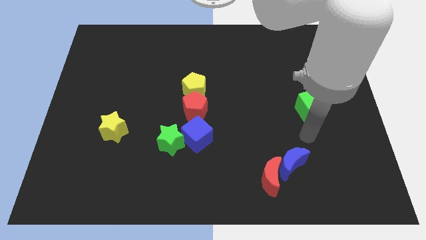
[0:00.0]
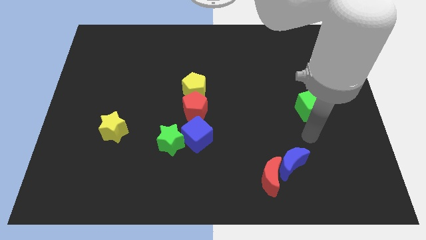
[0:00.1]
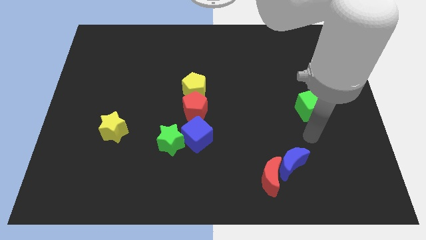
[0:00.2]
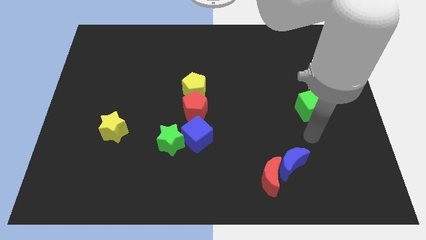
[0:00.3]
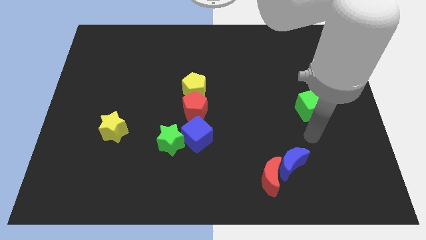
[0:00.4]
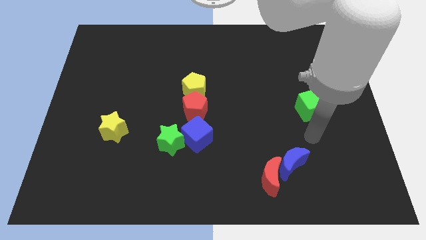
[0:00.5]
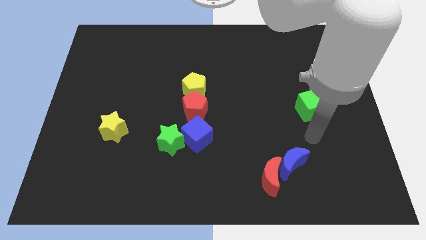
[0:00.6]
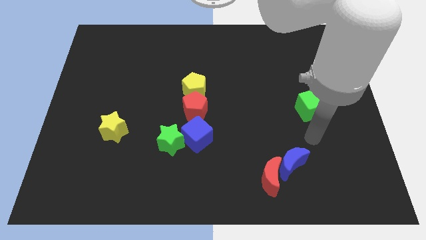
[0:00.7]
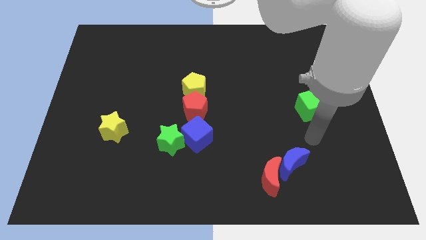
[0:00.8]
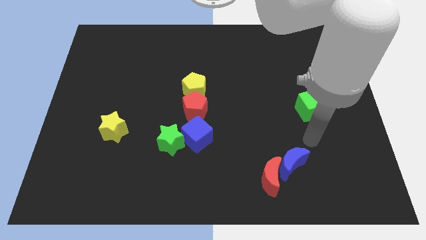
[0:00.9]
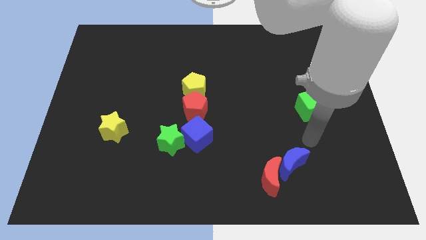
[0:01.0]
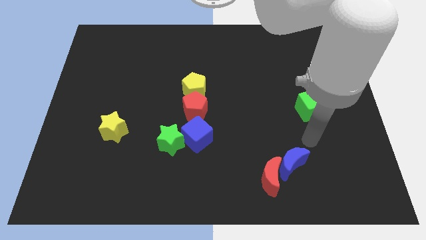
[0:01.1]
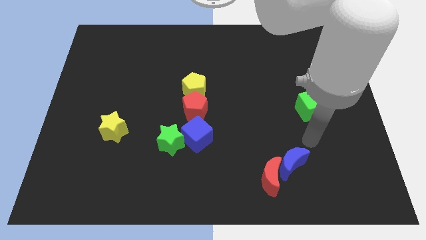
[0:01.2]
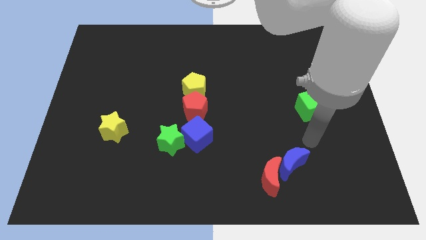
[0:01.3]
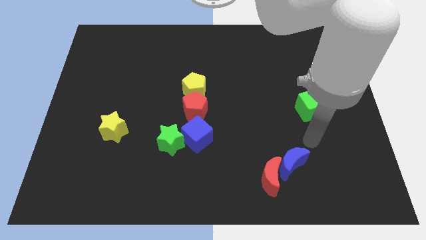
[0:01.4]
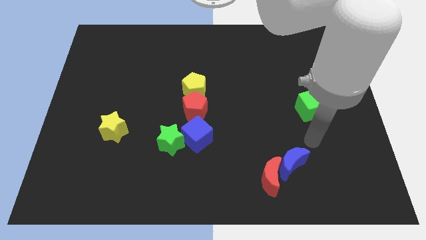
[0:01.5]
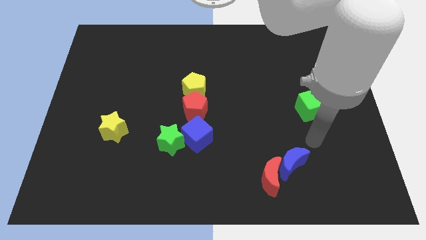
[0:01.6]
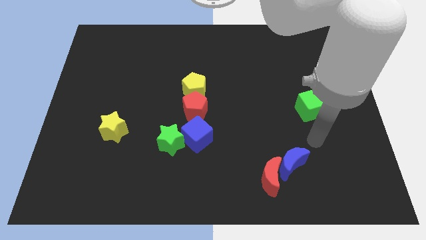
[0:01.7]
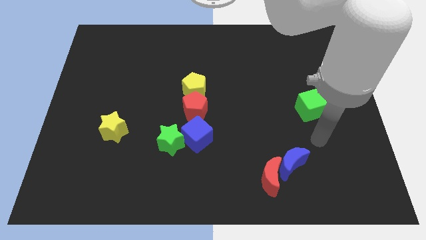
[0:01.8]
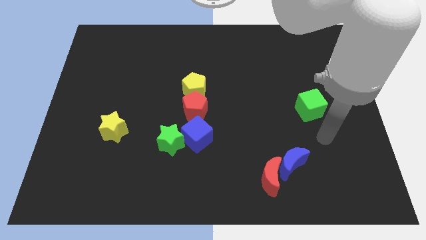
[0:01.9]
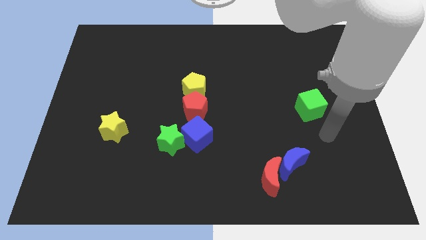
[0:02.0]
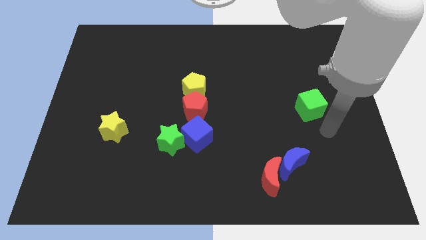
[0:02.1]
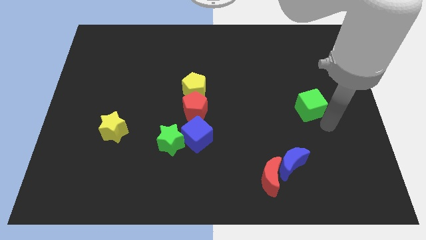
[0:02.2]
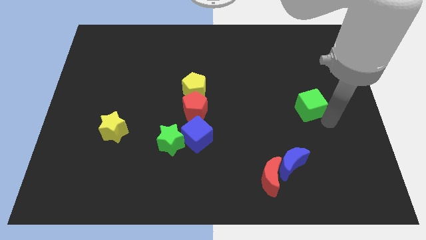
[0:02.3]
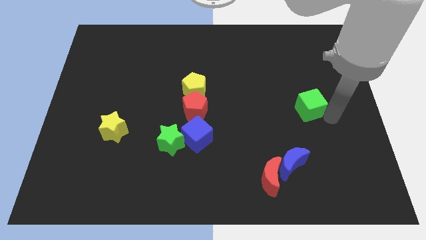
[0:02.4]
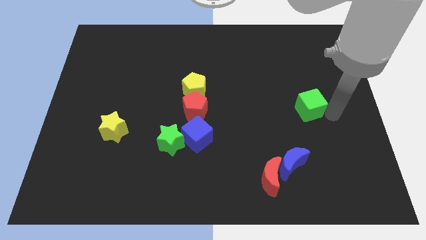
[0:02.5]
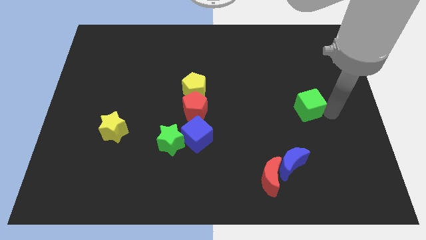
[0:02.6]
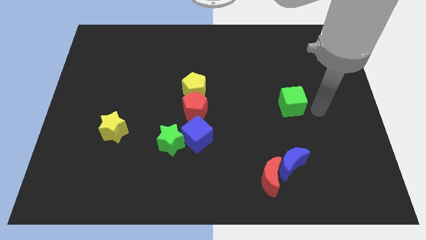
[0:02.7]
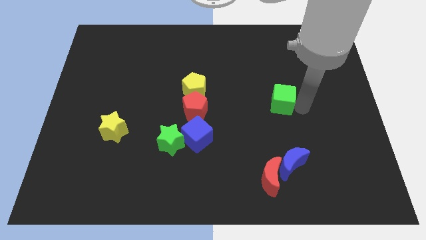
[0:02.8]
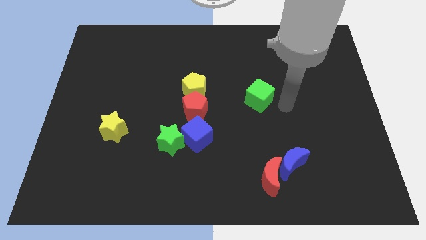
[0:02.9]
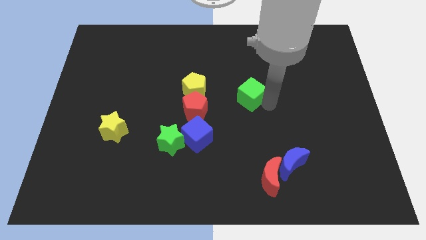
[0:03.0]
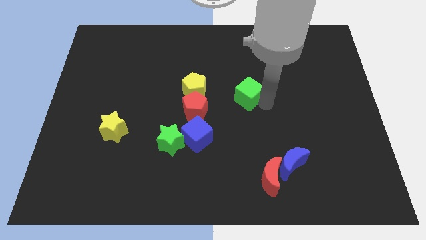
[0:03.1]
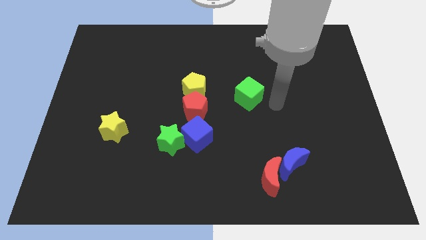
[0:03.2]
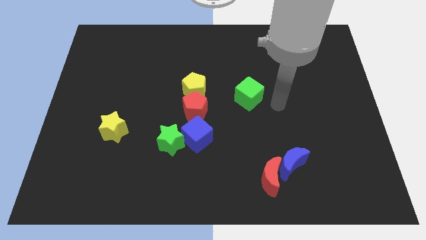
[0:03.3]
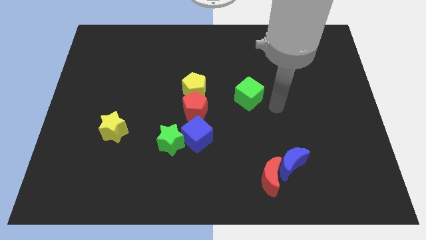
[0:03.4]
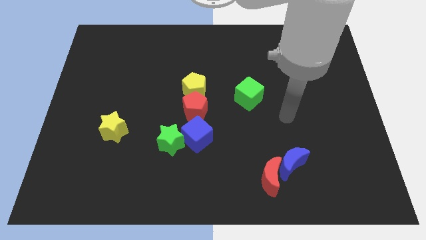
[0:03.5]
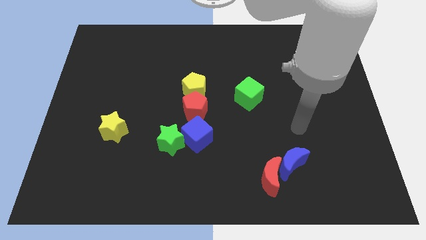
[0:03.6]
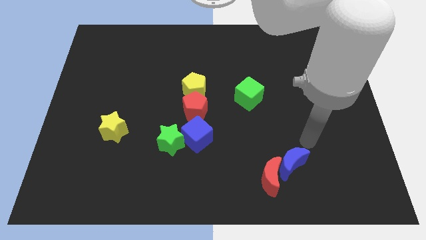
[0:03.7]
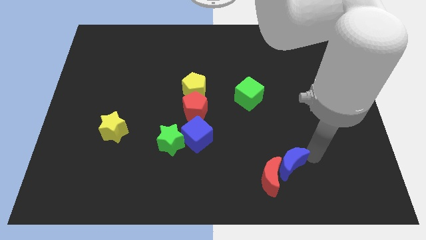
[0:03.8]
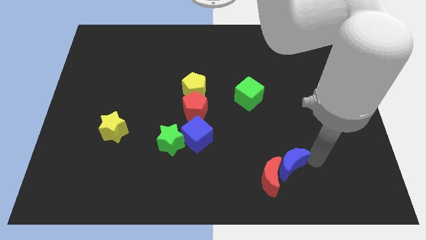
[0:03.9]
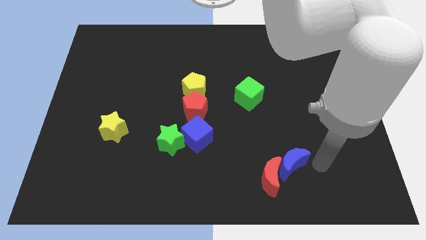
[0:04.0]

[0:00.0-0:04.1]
move the green cube slightly towards the left side

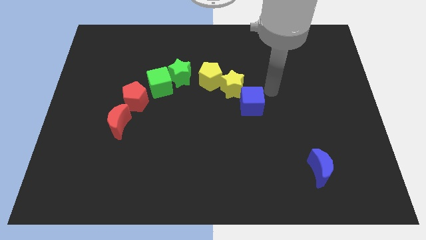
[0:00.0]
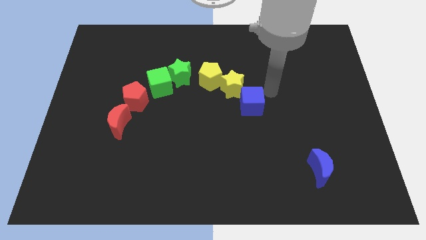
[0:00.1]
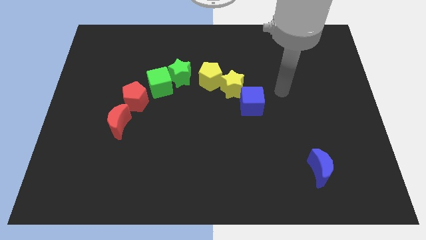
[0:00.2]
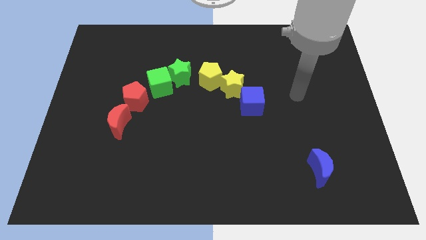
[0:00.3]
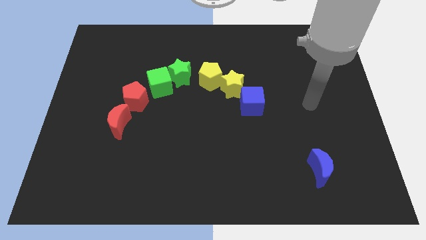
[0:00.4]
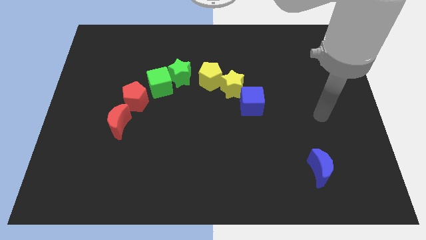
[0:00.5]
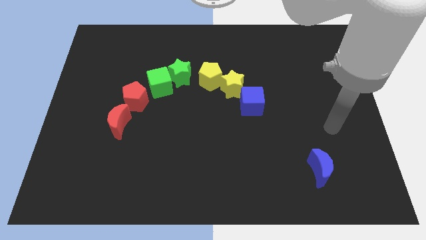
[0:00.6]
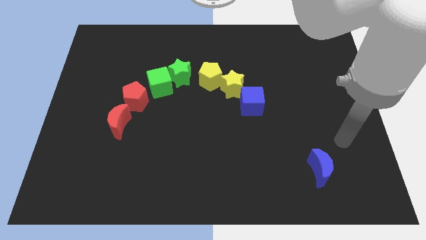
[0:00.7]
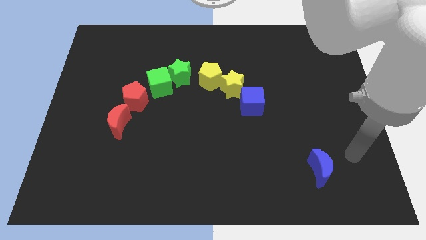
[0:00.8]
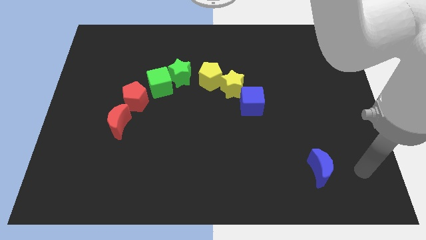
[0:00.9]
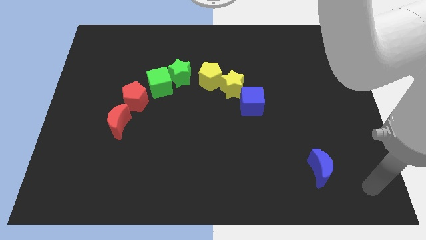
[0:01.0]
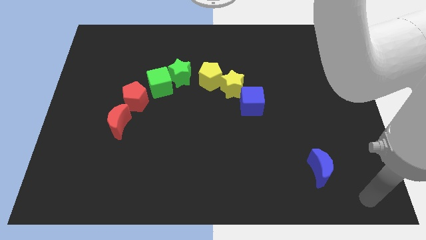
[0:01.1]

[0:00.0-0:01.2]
point your arm to the bottom right to the board

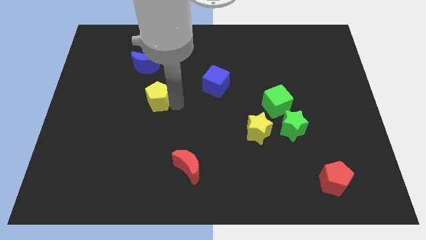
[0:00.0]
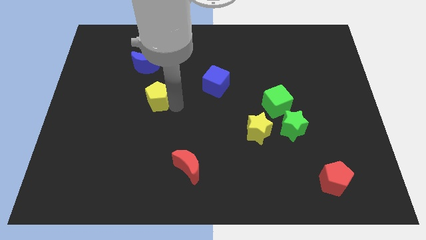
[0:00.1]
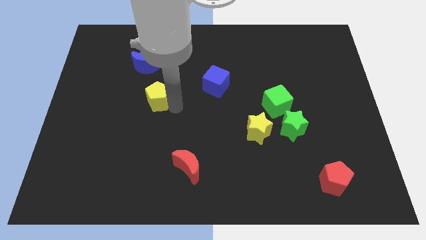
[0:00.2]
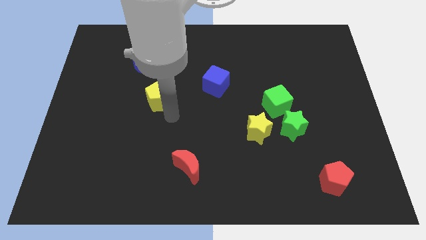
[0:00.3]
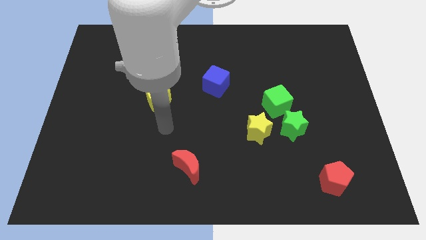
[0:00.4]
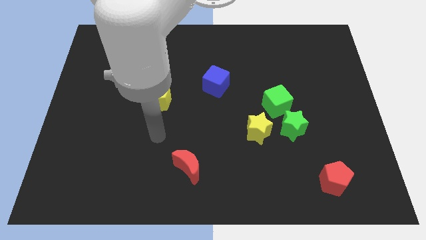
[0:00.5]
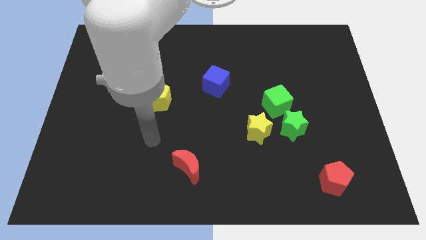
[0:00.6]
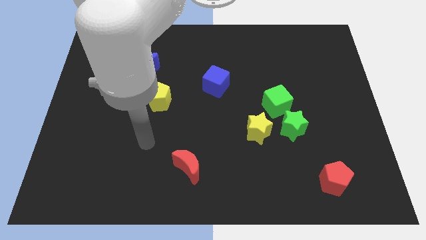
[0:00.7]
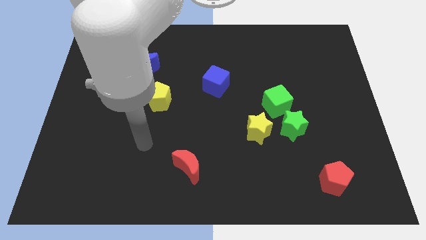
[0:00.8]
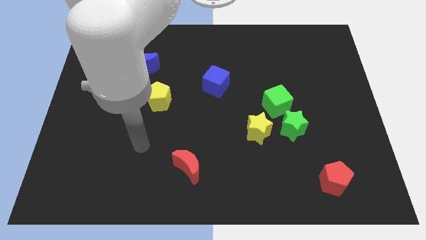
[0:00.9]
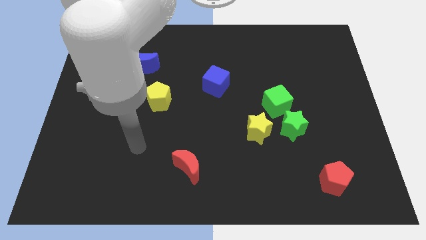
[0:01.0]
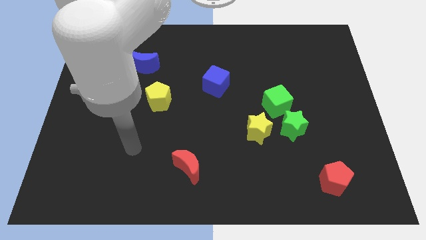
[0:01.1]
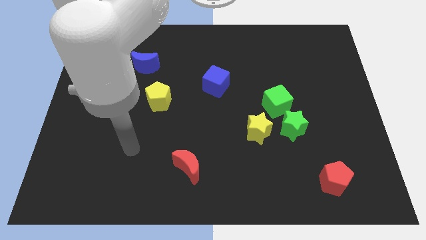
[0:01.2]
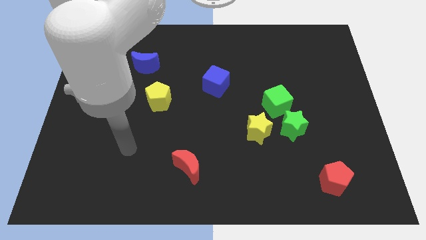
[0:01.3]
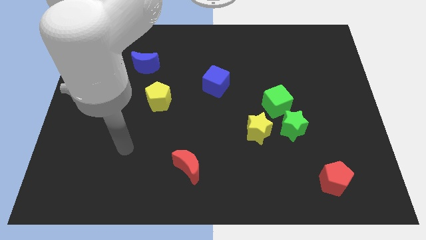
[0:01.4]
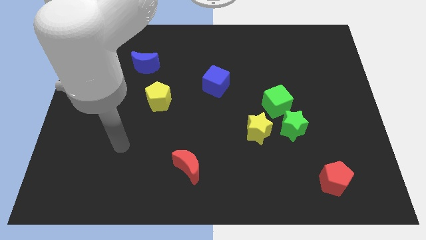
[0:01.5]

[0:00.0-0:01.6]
move your hand away from the yellow pentagon

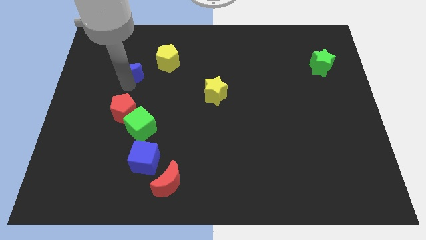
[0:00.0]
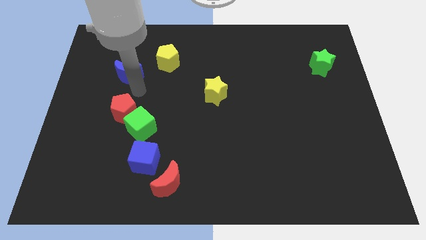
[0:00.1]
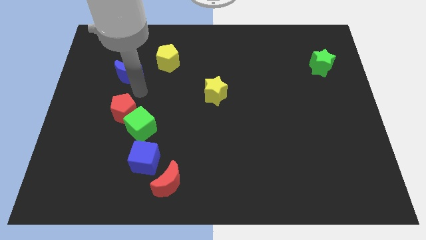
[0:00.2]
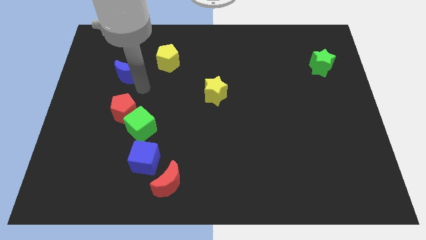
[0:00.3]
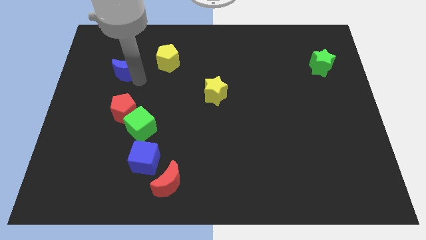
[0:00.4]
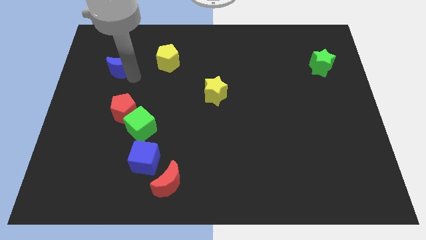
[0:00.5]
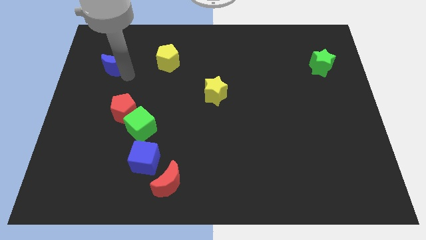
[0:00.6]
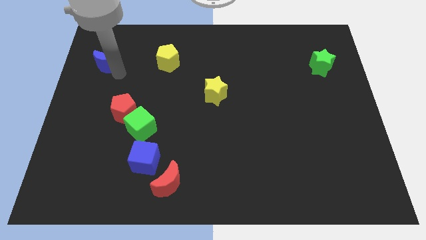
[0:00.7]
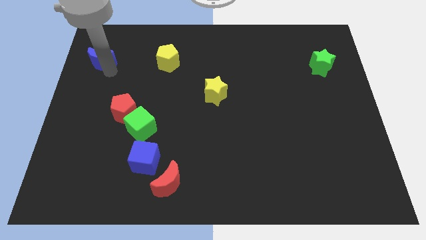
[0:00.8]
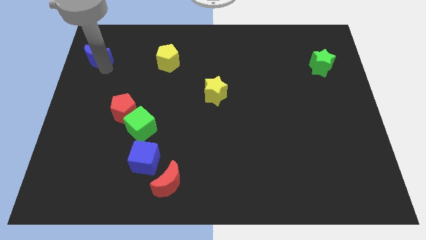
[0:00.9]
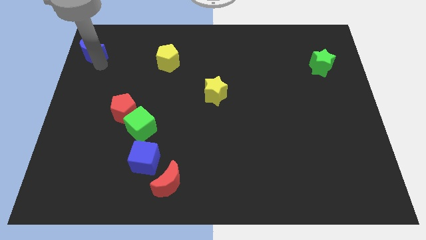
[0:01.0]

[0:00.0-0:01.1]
place the blue moon parallel to yellow pentagon

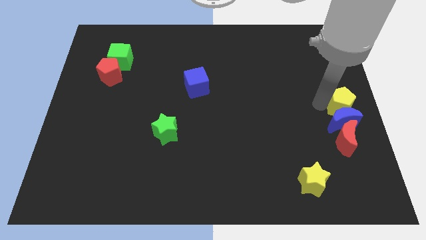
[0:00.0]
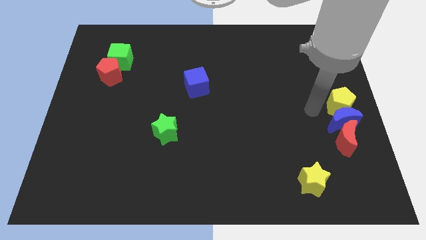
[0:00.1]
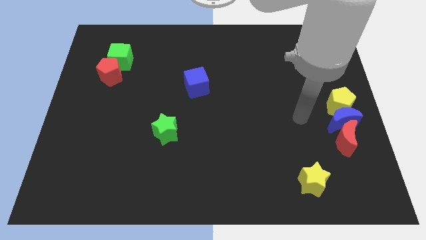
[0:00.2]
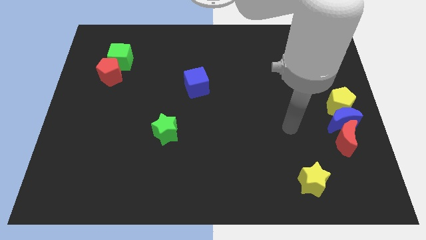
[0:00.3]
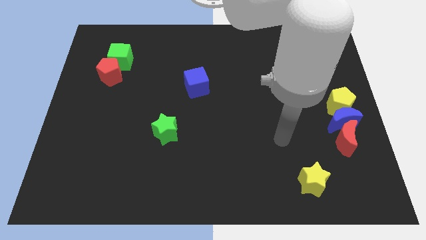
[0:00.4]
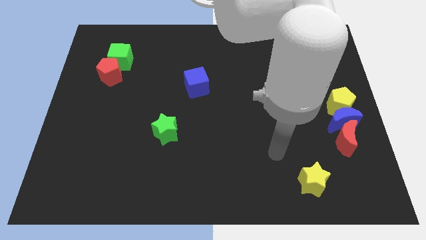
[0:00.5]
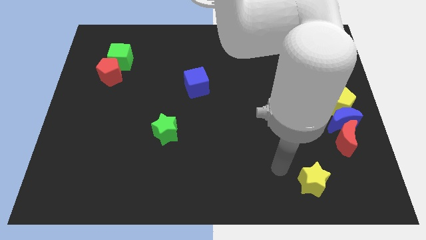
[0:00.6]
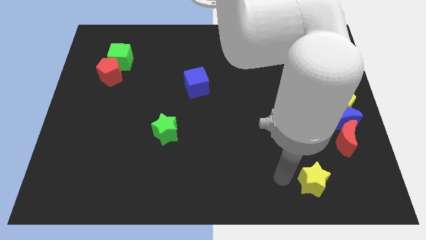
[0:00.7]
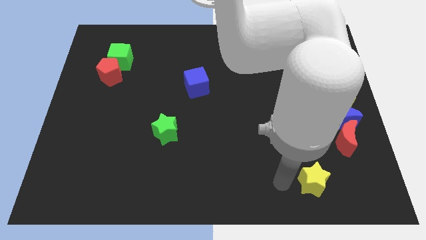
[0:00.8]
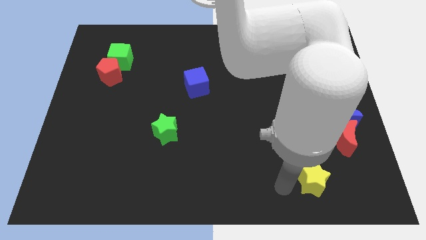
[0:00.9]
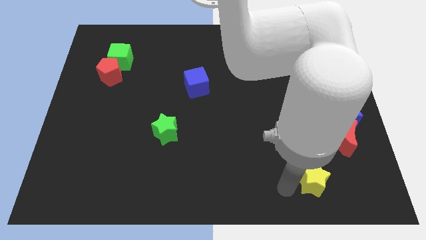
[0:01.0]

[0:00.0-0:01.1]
move your arm away from yellow pentagon
